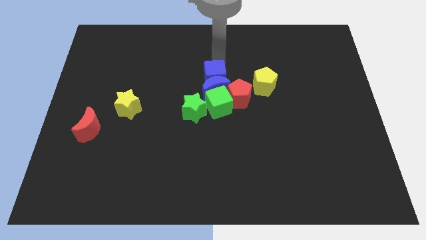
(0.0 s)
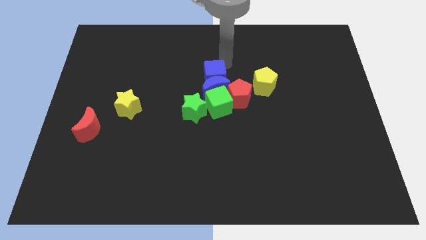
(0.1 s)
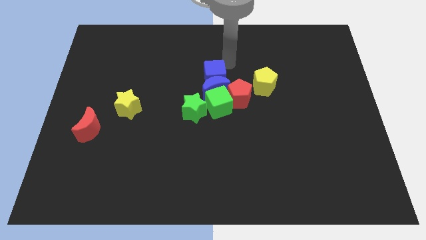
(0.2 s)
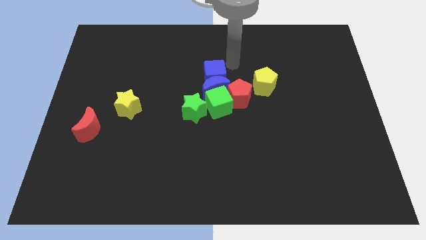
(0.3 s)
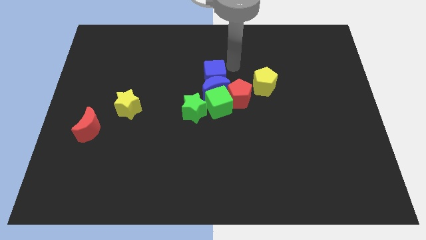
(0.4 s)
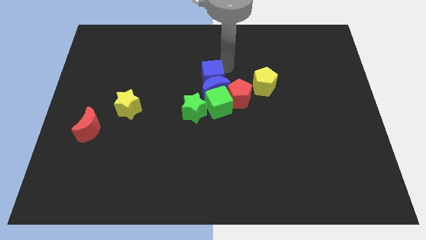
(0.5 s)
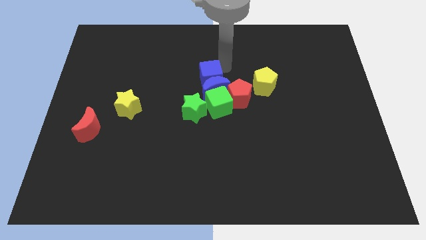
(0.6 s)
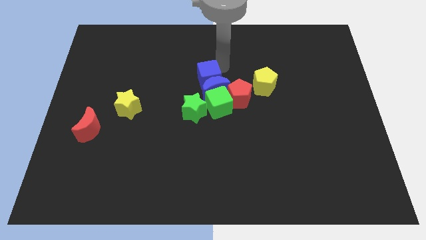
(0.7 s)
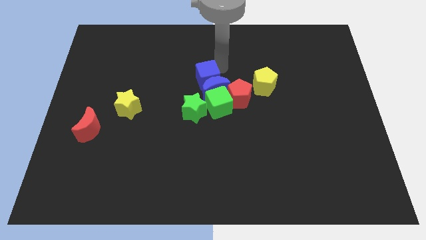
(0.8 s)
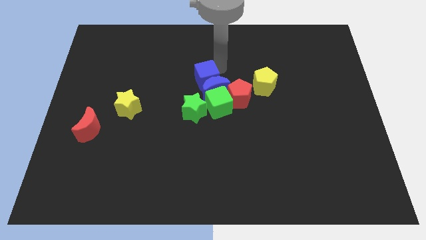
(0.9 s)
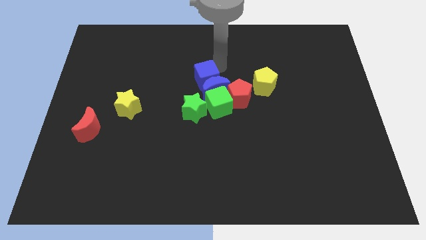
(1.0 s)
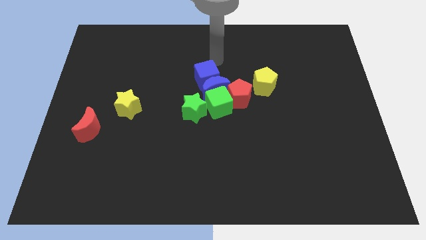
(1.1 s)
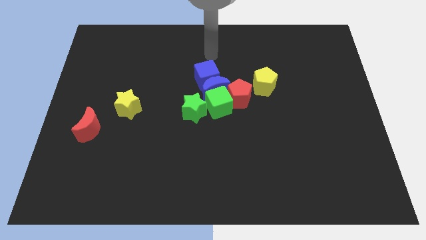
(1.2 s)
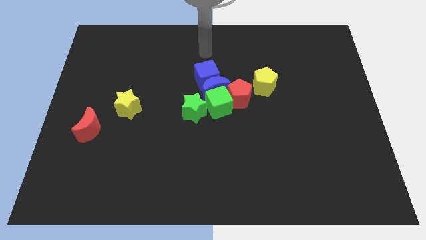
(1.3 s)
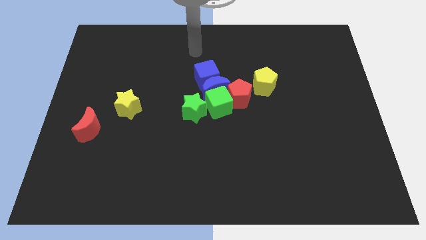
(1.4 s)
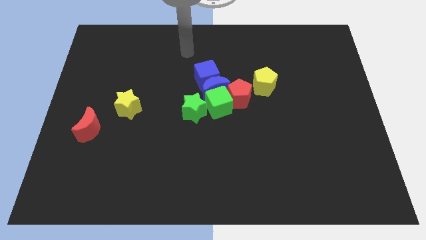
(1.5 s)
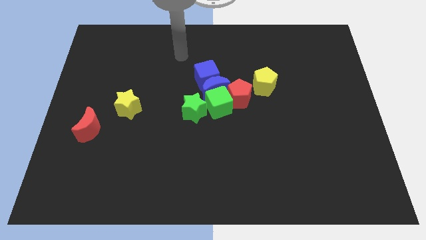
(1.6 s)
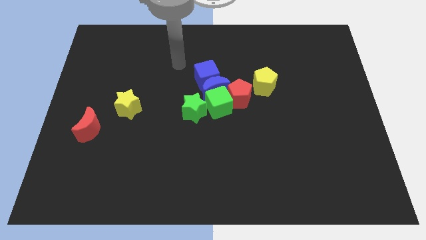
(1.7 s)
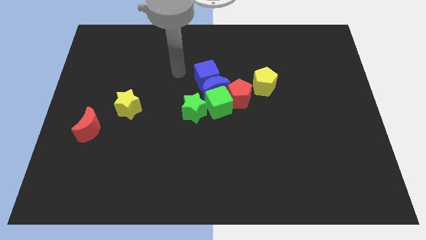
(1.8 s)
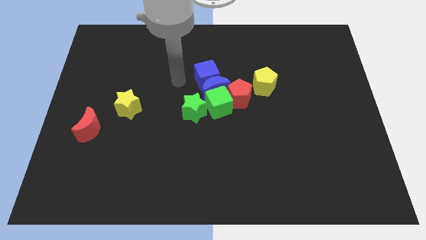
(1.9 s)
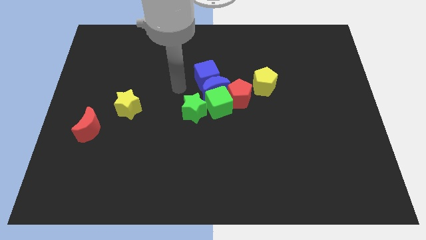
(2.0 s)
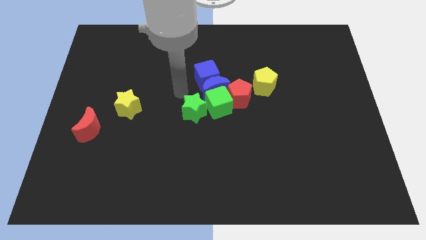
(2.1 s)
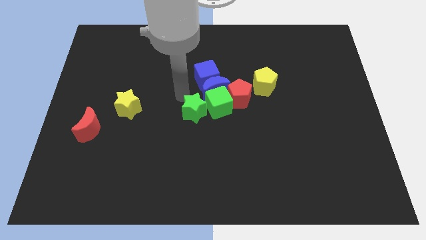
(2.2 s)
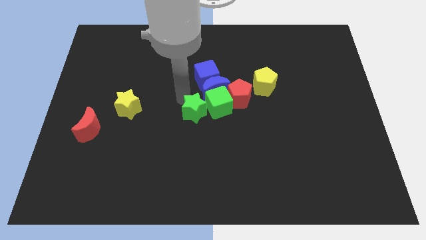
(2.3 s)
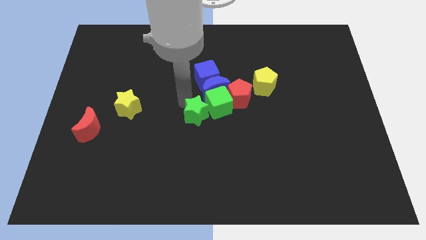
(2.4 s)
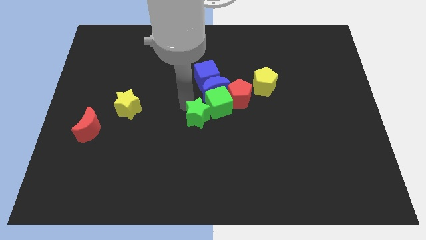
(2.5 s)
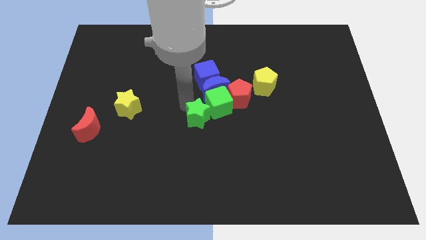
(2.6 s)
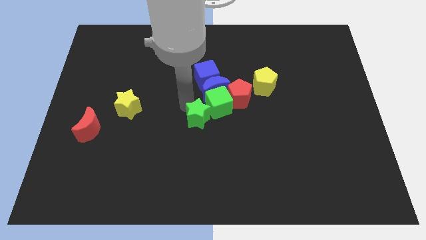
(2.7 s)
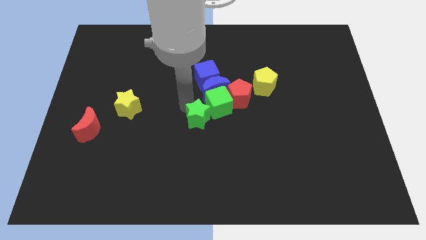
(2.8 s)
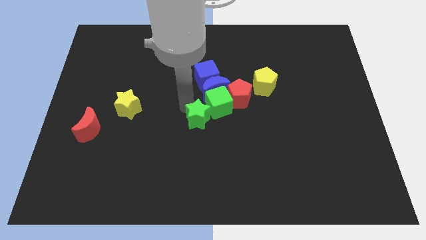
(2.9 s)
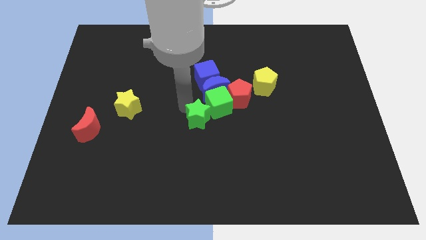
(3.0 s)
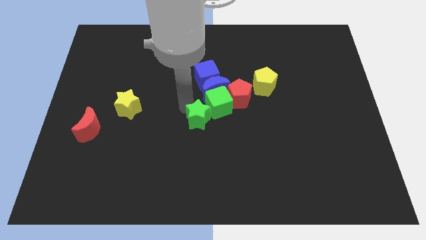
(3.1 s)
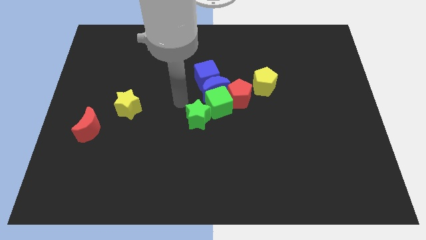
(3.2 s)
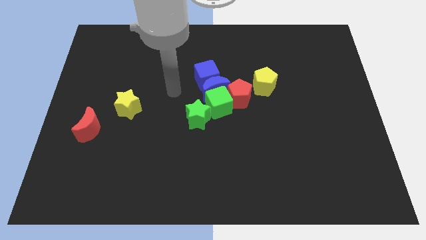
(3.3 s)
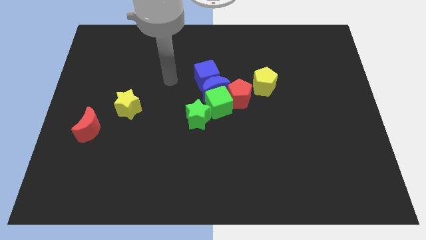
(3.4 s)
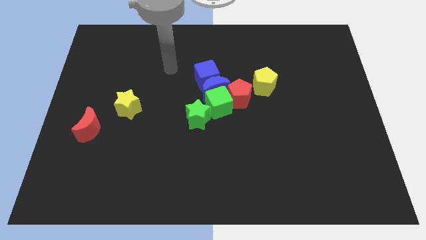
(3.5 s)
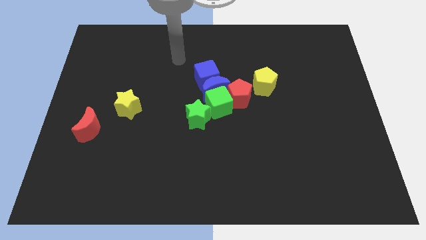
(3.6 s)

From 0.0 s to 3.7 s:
slightly push the green star towards the bottom side of the board

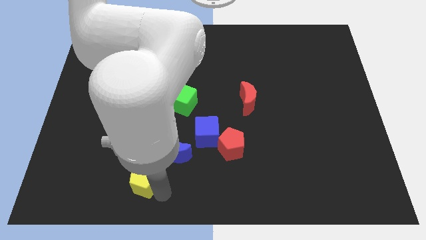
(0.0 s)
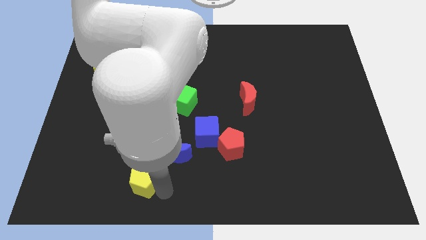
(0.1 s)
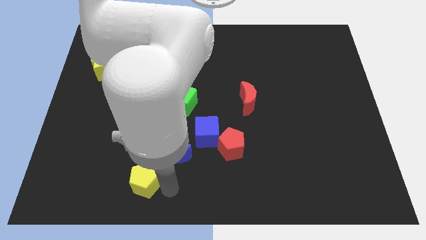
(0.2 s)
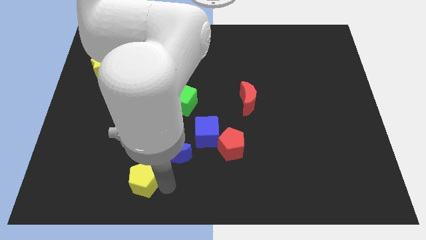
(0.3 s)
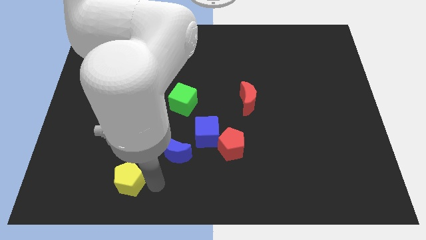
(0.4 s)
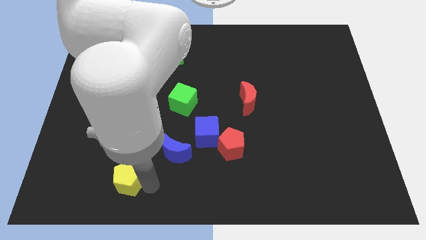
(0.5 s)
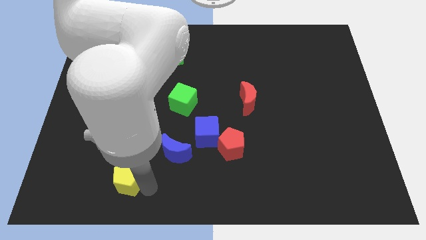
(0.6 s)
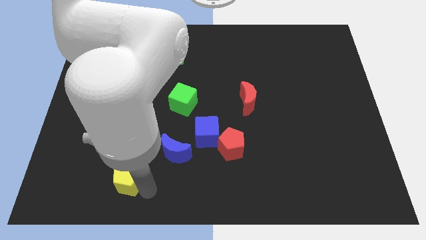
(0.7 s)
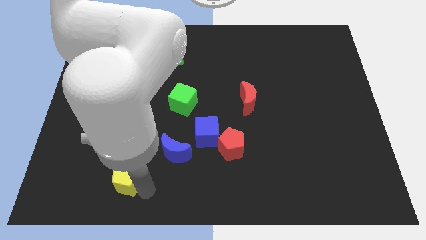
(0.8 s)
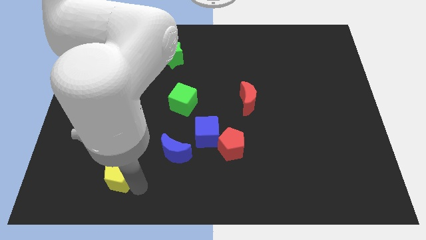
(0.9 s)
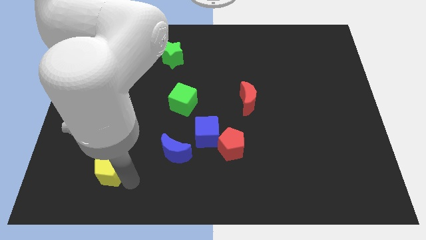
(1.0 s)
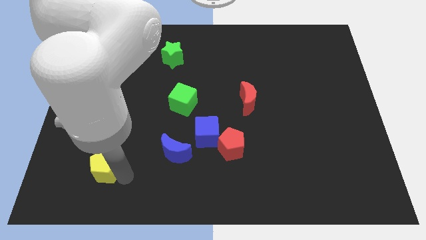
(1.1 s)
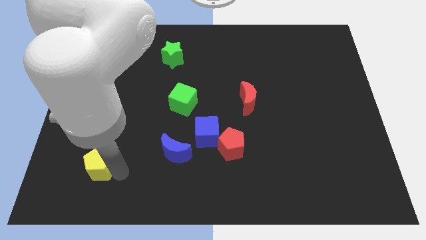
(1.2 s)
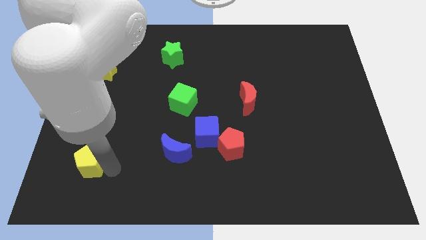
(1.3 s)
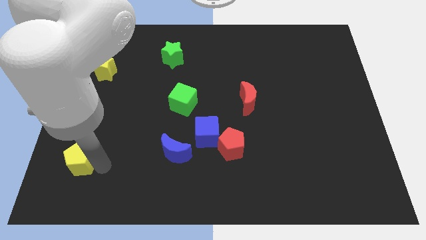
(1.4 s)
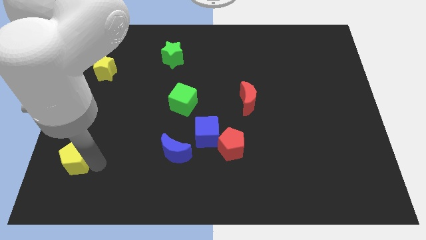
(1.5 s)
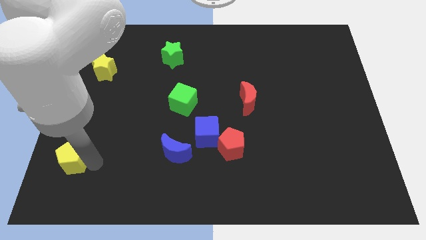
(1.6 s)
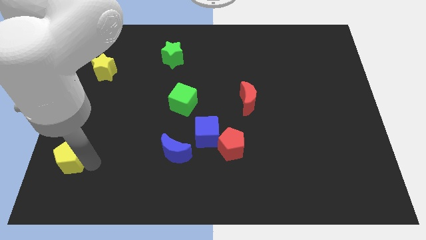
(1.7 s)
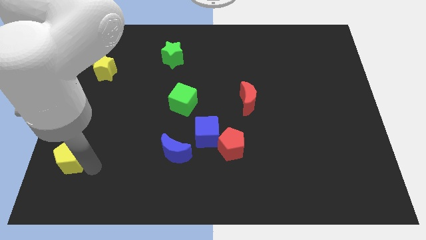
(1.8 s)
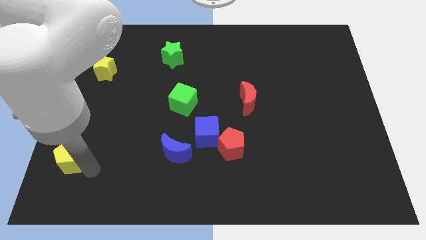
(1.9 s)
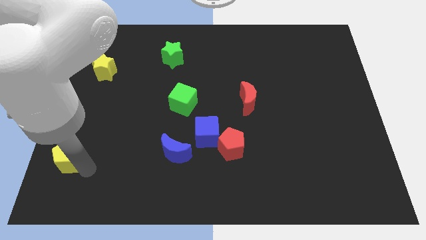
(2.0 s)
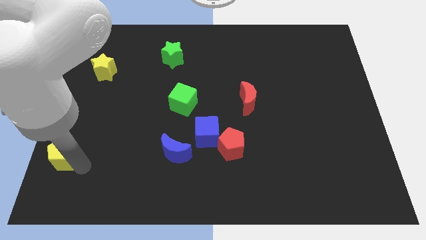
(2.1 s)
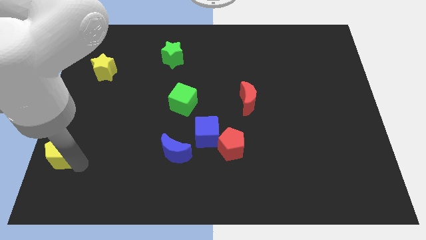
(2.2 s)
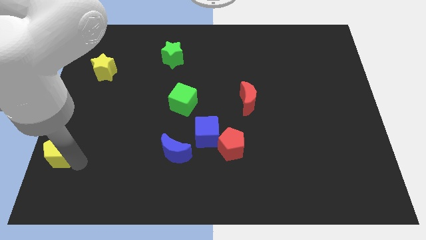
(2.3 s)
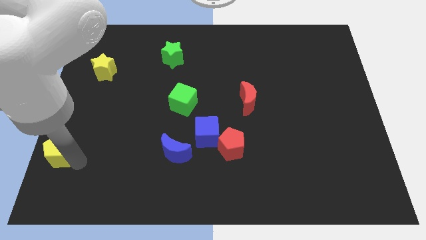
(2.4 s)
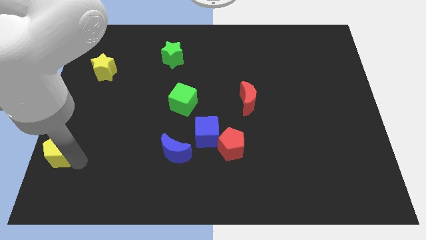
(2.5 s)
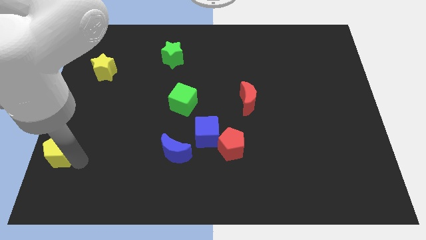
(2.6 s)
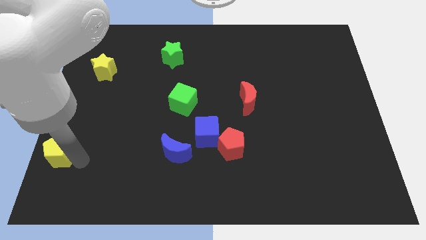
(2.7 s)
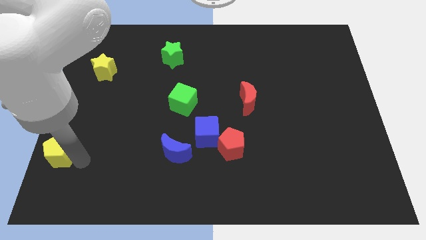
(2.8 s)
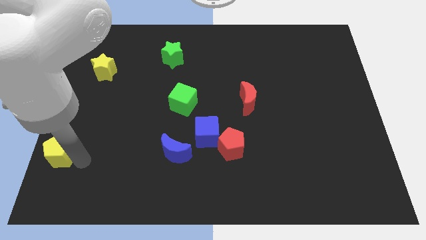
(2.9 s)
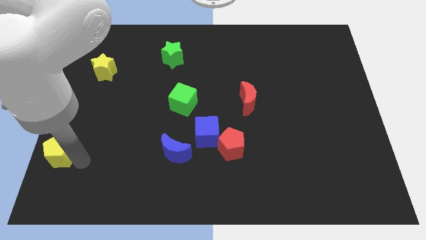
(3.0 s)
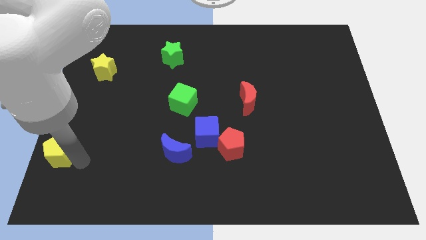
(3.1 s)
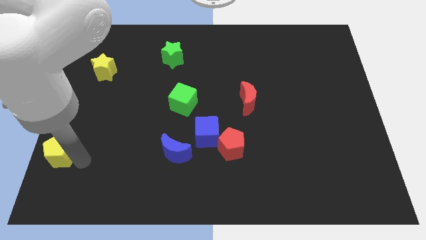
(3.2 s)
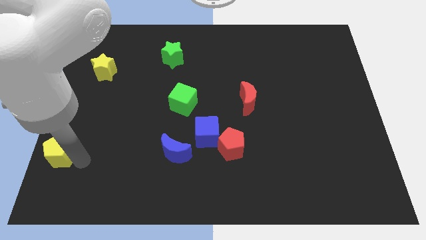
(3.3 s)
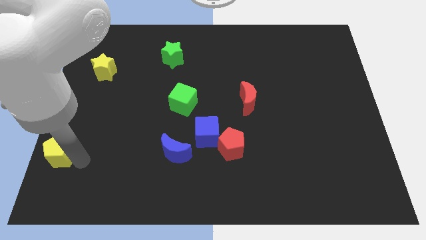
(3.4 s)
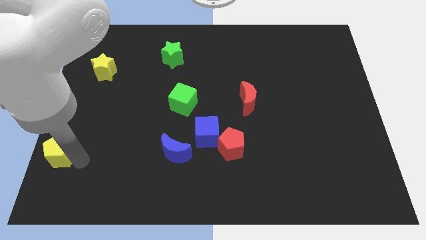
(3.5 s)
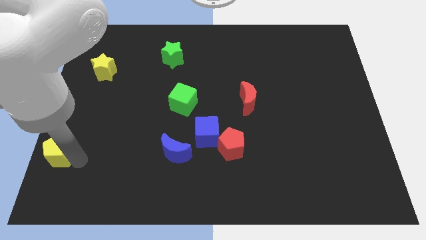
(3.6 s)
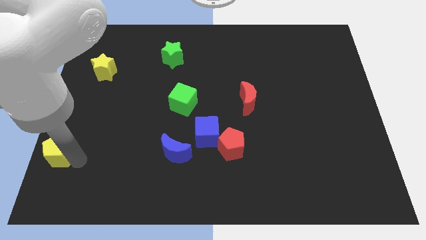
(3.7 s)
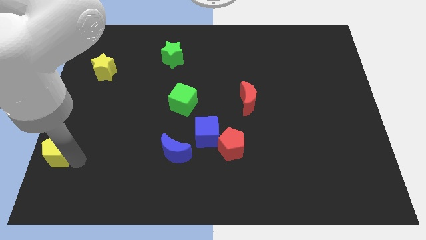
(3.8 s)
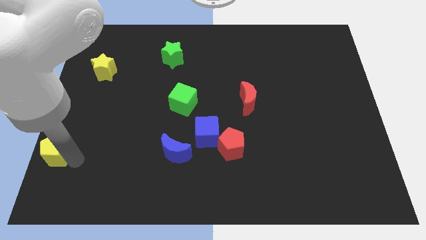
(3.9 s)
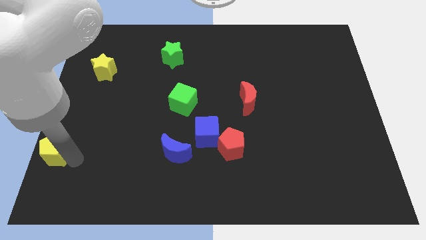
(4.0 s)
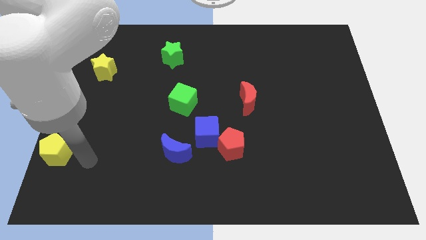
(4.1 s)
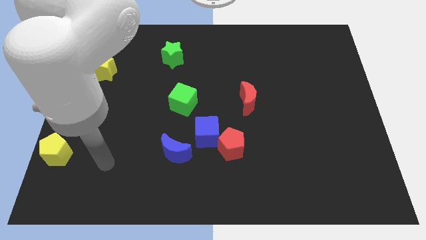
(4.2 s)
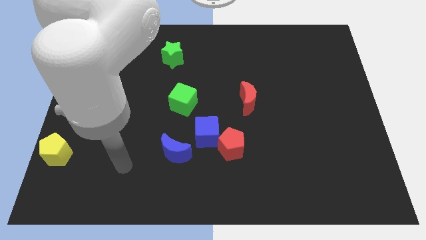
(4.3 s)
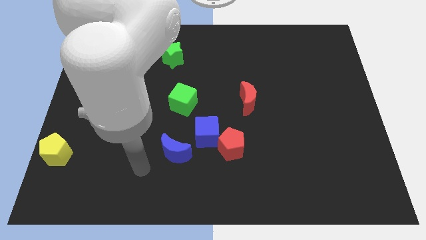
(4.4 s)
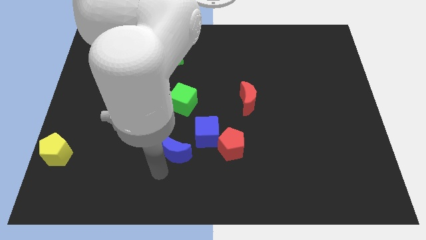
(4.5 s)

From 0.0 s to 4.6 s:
move the yellow pentagon away from the bottom left

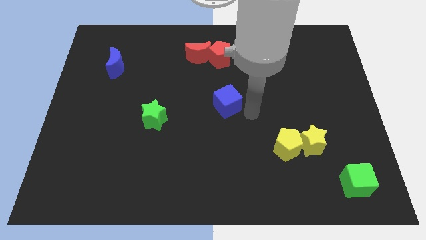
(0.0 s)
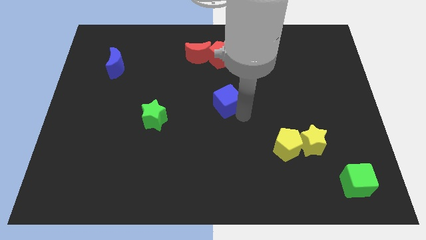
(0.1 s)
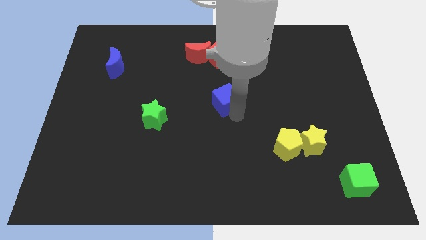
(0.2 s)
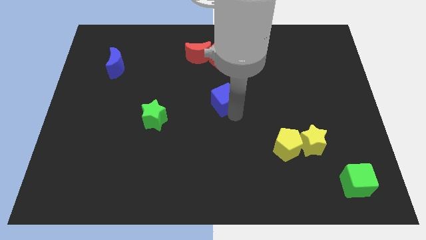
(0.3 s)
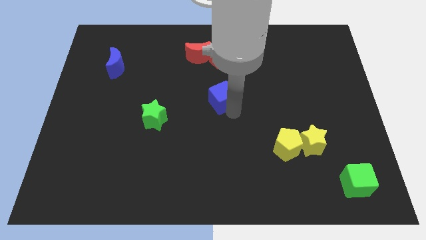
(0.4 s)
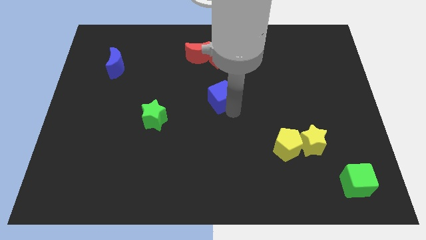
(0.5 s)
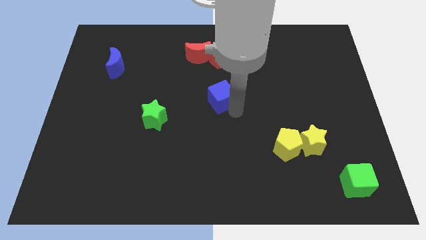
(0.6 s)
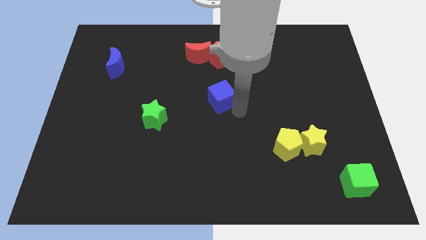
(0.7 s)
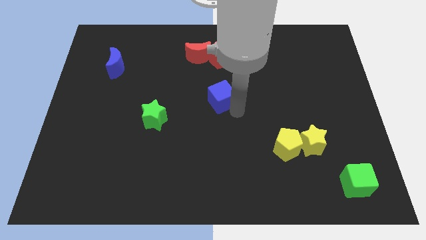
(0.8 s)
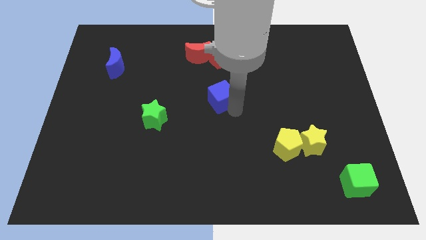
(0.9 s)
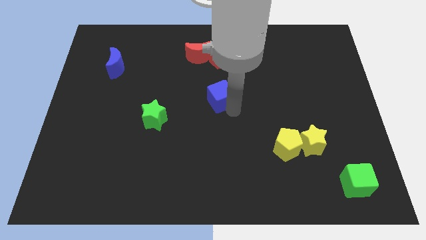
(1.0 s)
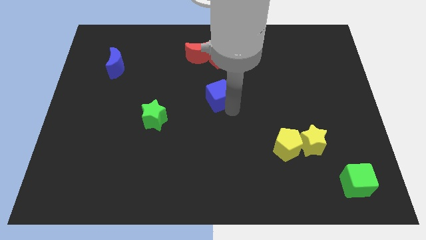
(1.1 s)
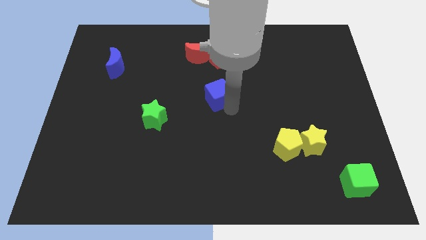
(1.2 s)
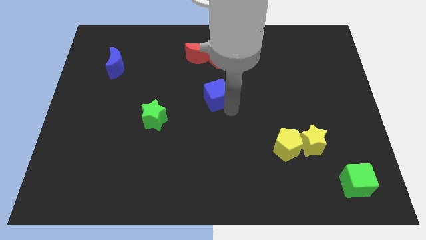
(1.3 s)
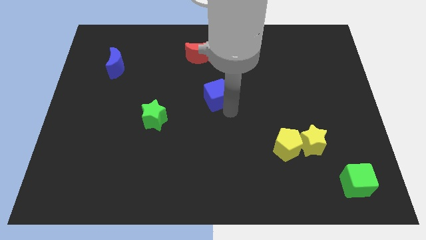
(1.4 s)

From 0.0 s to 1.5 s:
place the blue cube at the center of the board
